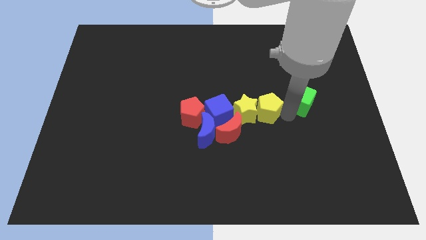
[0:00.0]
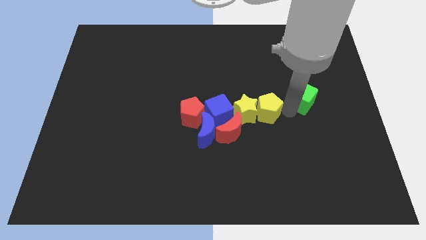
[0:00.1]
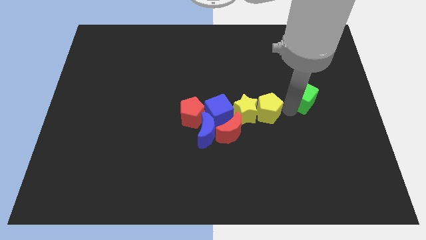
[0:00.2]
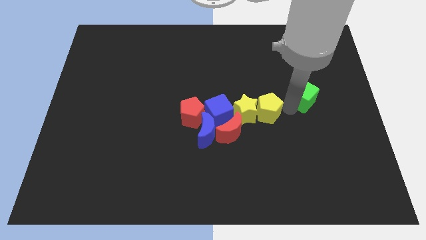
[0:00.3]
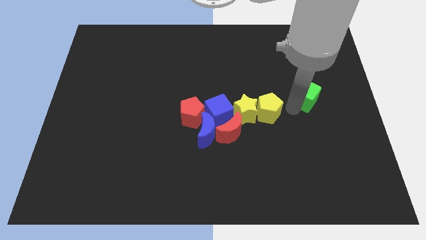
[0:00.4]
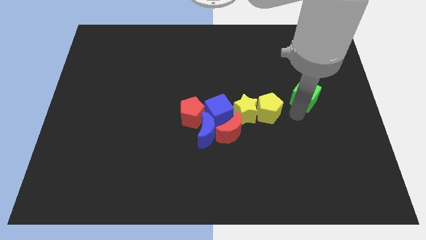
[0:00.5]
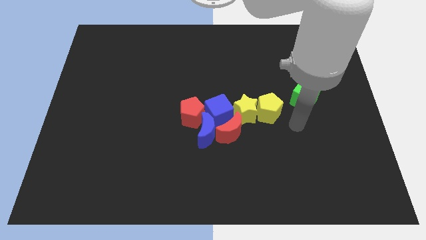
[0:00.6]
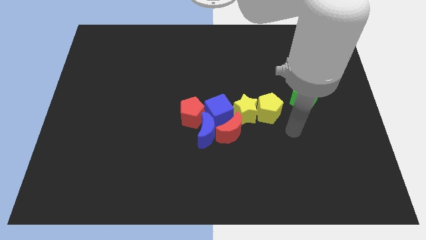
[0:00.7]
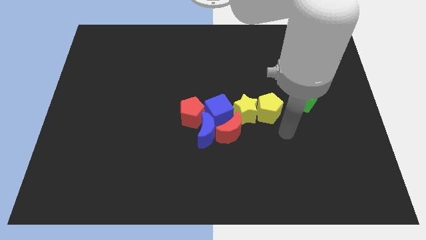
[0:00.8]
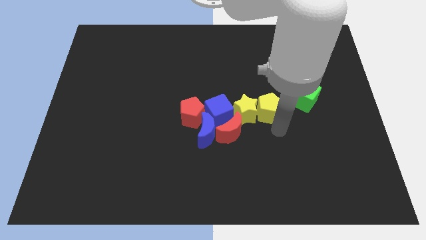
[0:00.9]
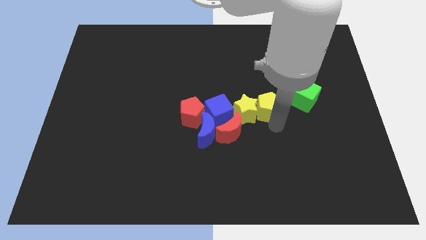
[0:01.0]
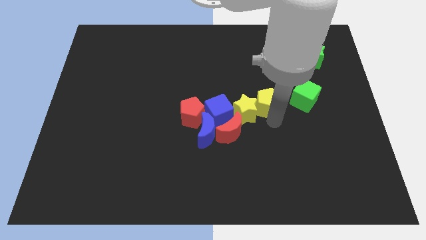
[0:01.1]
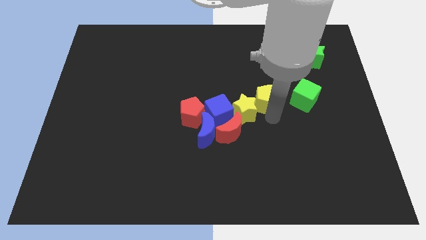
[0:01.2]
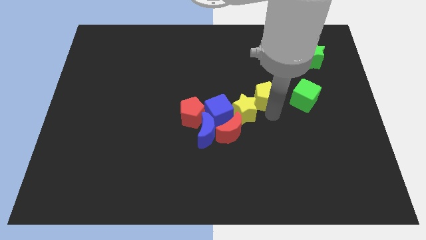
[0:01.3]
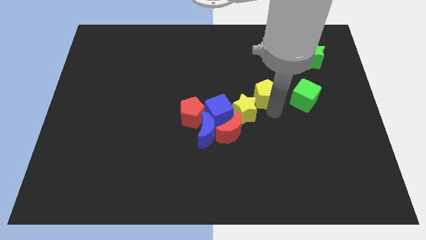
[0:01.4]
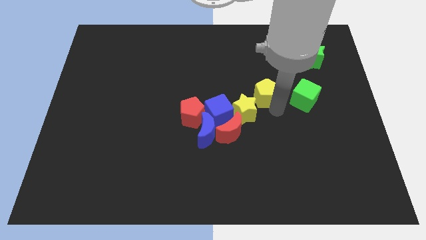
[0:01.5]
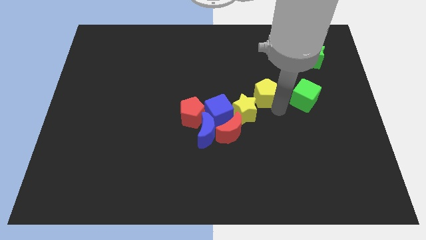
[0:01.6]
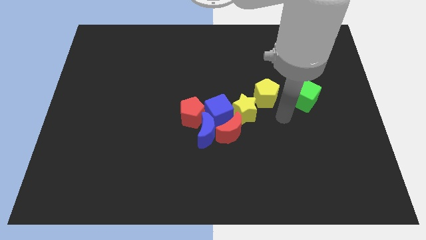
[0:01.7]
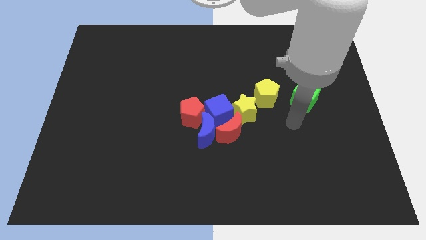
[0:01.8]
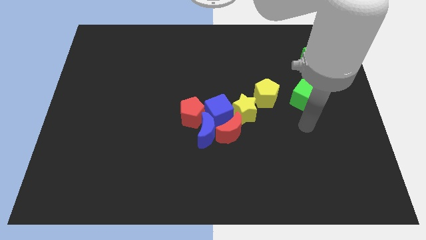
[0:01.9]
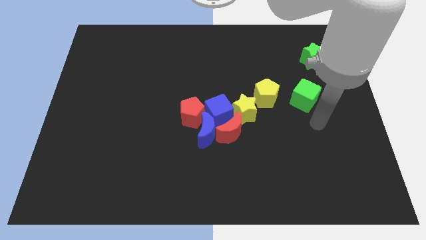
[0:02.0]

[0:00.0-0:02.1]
place yellow pentagon to the left of the green cube

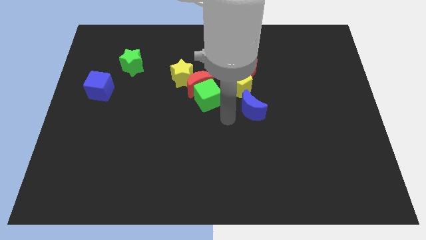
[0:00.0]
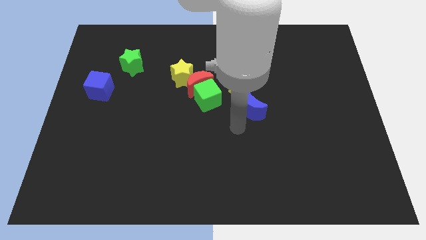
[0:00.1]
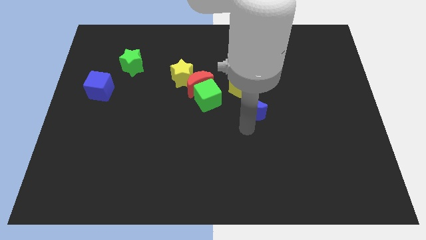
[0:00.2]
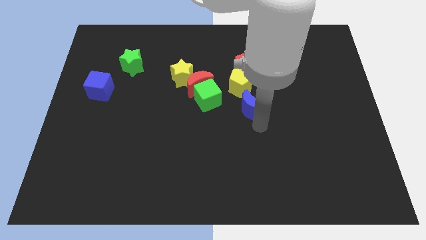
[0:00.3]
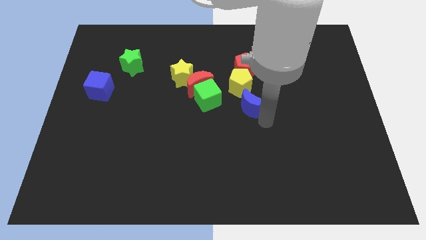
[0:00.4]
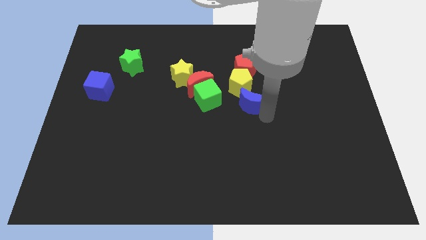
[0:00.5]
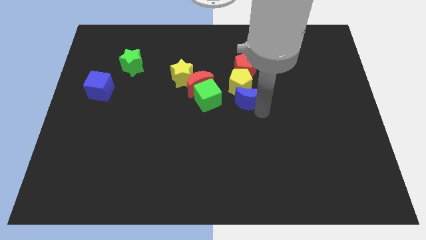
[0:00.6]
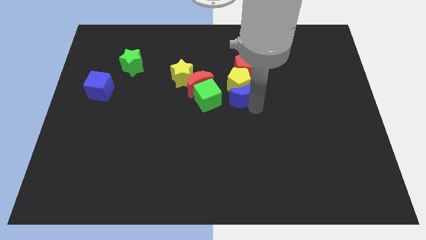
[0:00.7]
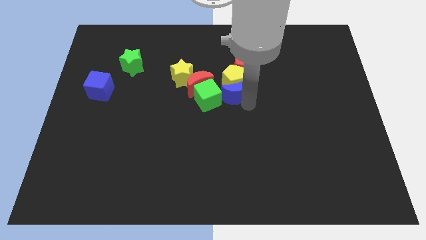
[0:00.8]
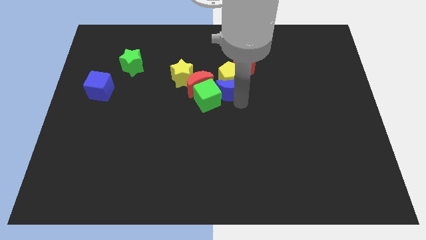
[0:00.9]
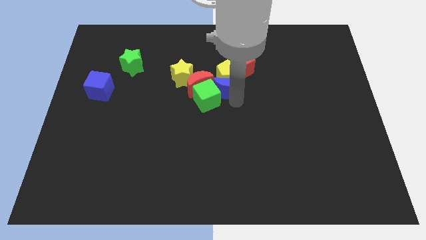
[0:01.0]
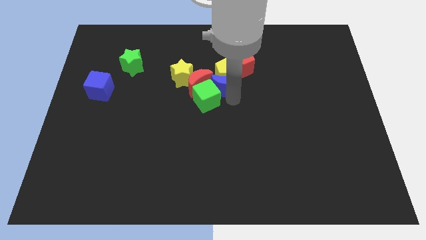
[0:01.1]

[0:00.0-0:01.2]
push blue moon into yellow pentagon

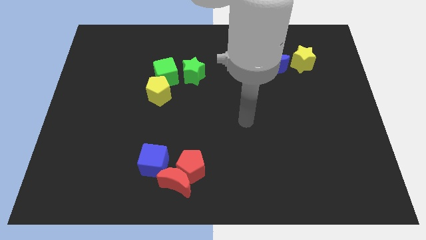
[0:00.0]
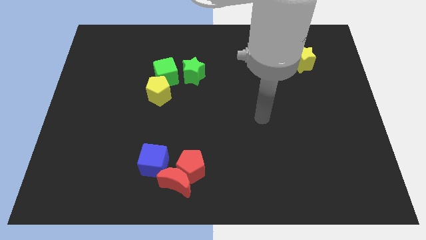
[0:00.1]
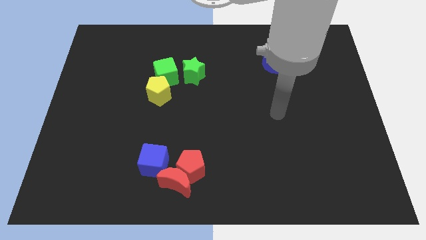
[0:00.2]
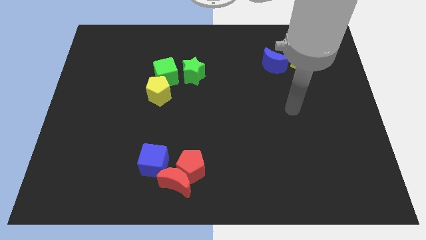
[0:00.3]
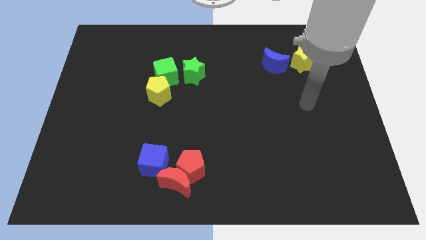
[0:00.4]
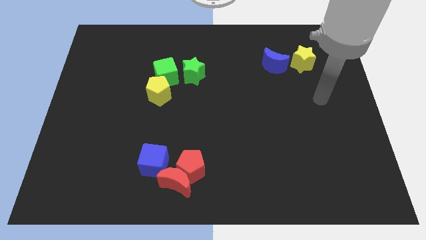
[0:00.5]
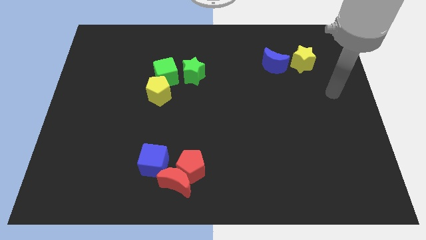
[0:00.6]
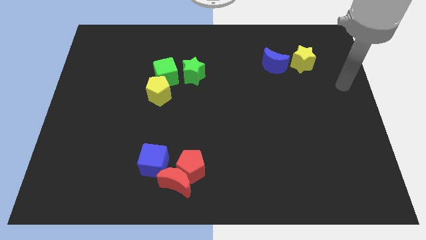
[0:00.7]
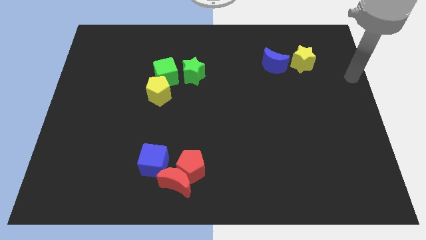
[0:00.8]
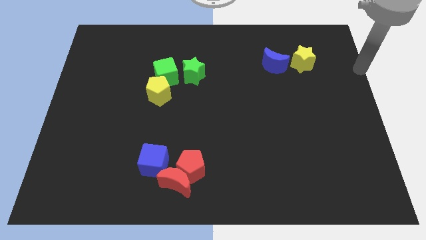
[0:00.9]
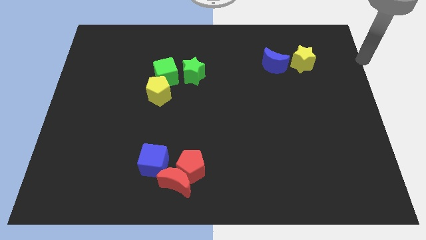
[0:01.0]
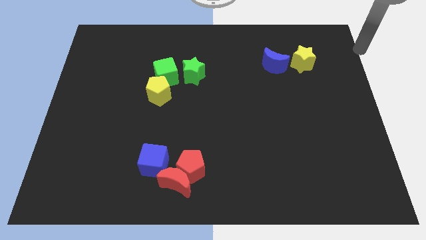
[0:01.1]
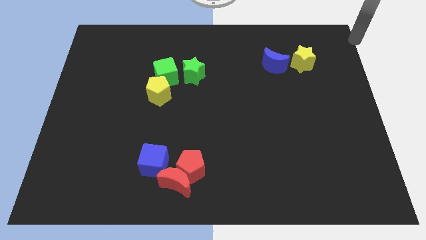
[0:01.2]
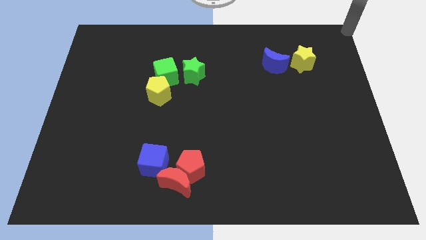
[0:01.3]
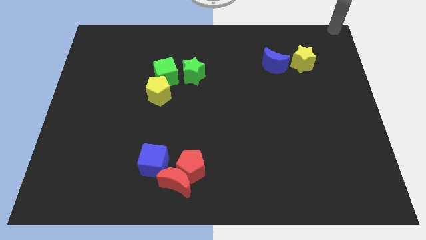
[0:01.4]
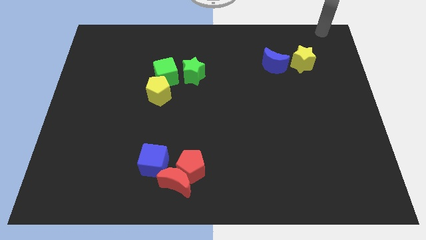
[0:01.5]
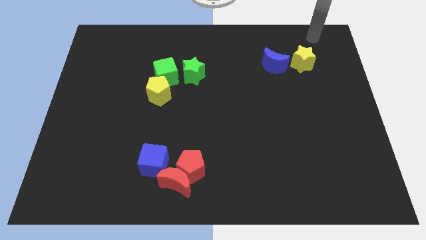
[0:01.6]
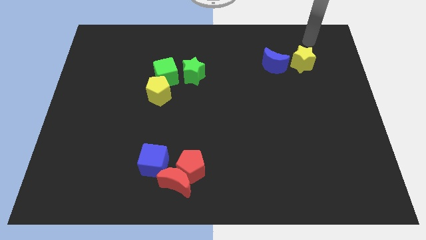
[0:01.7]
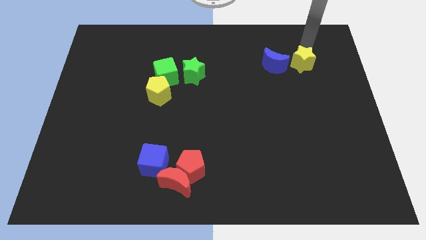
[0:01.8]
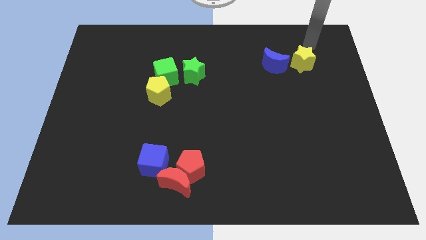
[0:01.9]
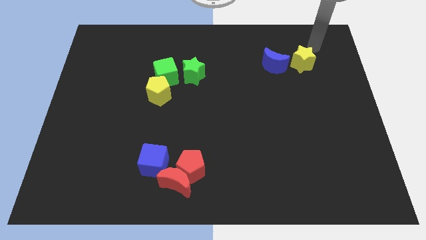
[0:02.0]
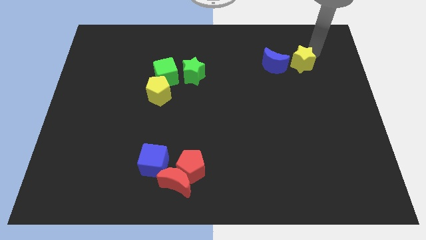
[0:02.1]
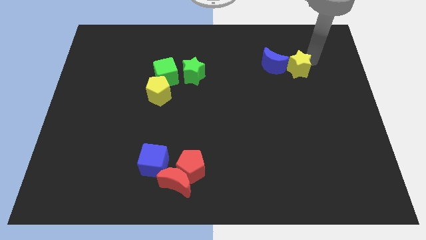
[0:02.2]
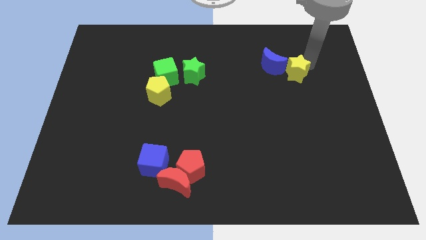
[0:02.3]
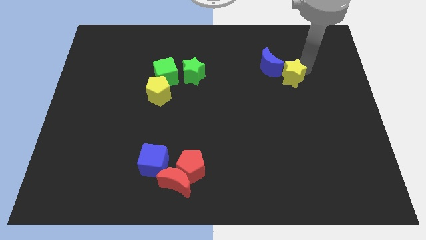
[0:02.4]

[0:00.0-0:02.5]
move yellow star slightly down

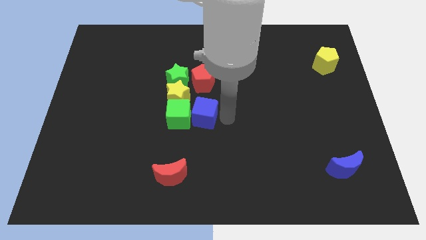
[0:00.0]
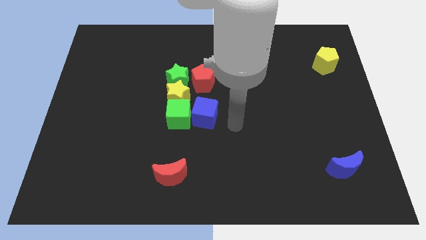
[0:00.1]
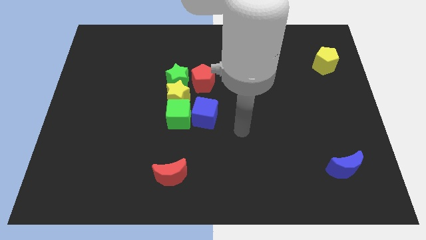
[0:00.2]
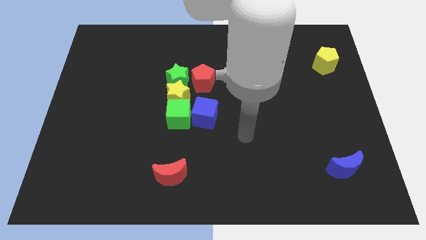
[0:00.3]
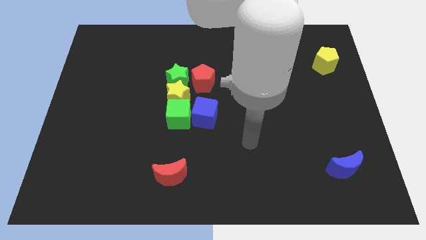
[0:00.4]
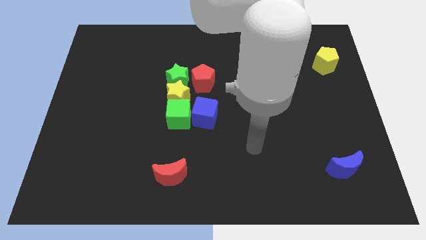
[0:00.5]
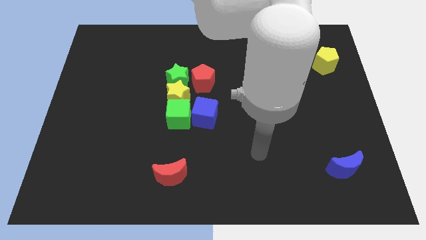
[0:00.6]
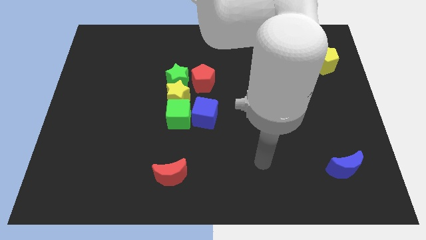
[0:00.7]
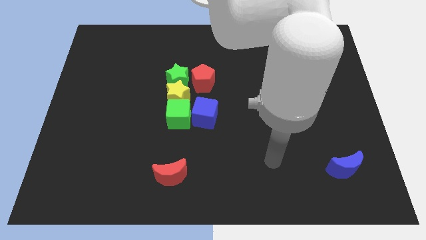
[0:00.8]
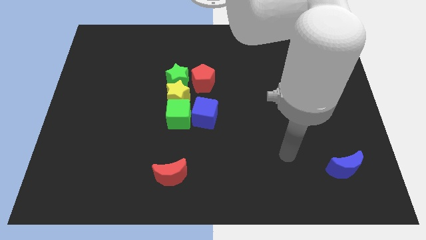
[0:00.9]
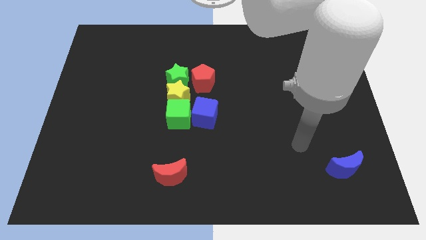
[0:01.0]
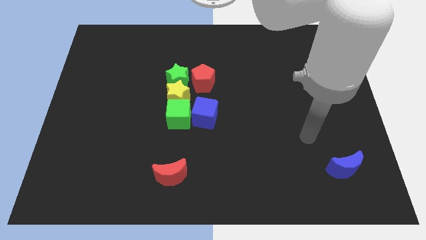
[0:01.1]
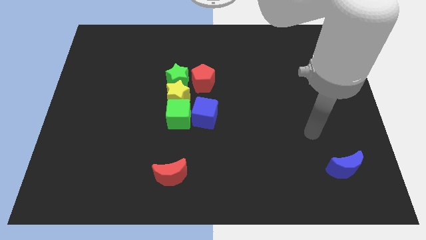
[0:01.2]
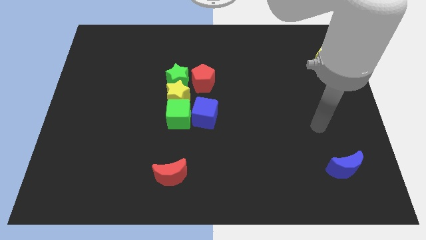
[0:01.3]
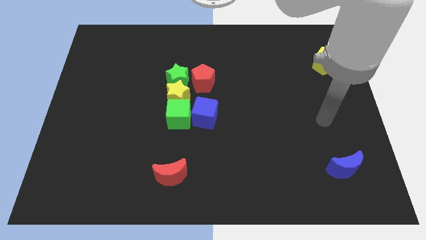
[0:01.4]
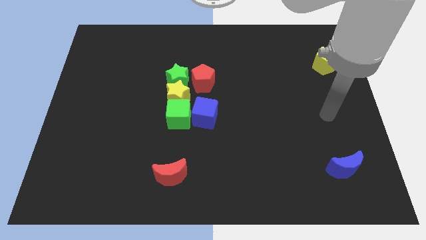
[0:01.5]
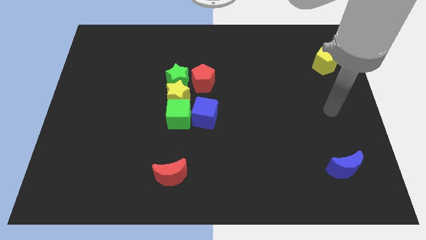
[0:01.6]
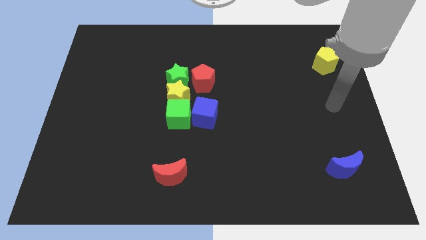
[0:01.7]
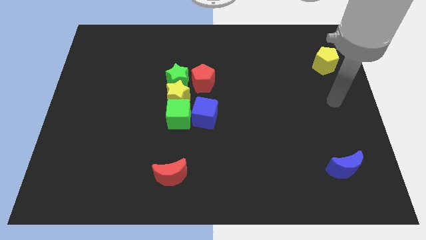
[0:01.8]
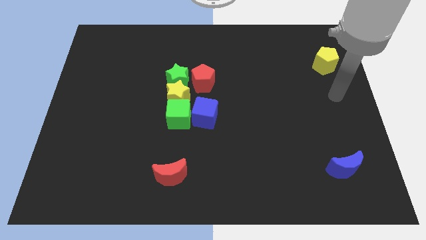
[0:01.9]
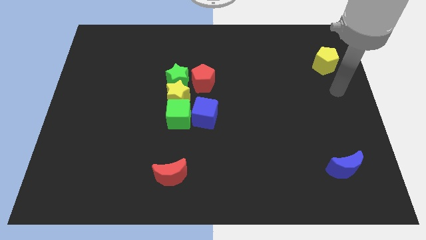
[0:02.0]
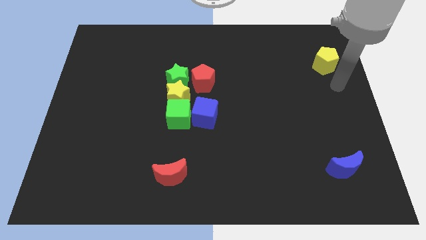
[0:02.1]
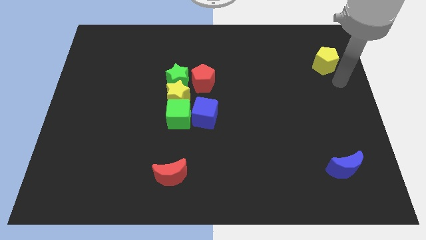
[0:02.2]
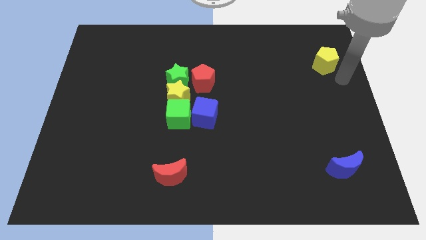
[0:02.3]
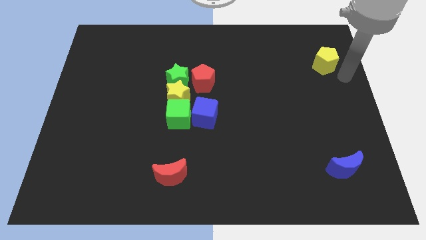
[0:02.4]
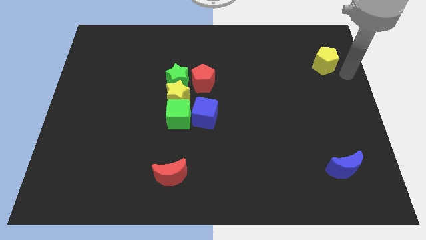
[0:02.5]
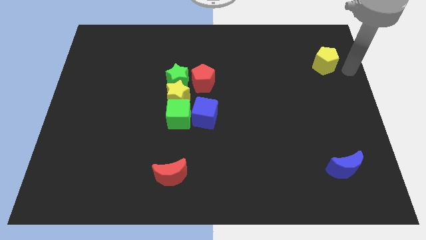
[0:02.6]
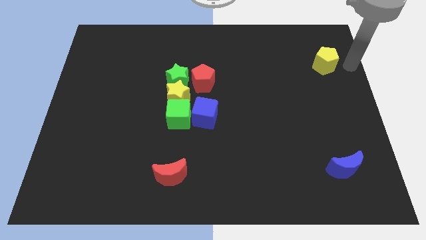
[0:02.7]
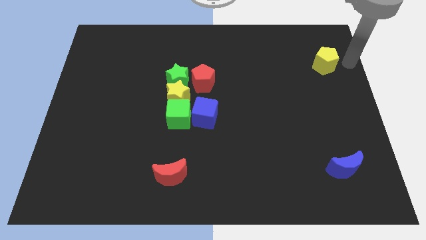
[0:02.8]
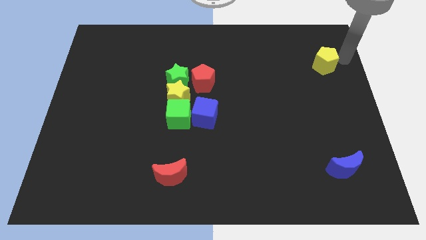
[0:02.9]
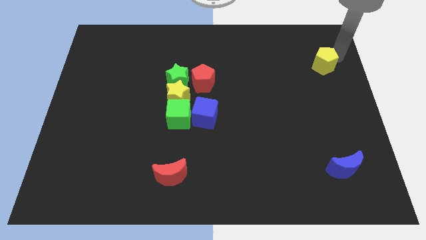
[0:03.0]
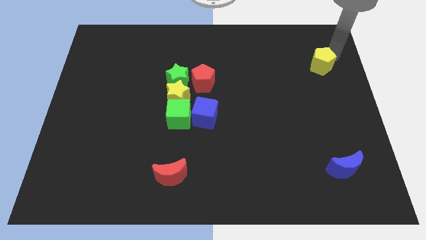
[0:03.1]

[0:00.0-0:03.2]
move your arm near the yellow pentagon
